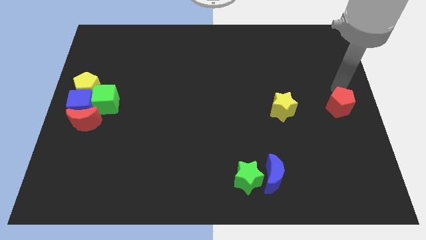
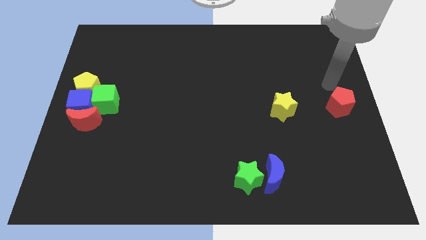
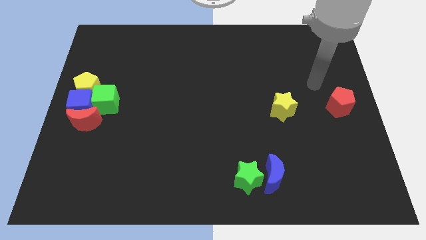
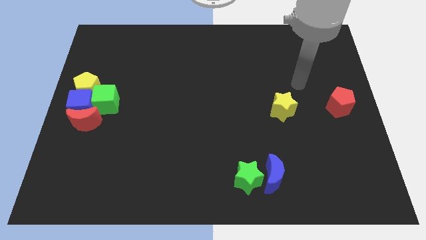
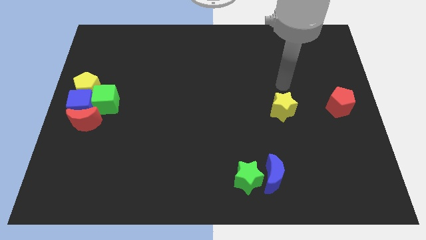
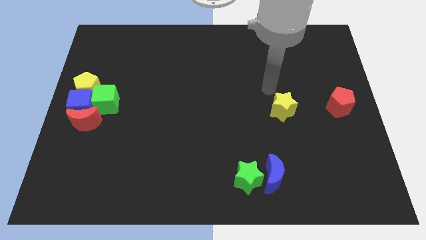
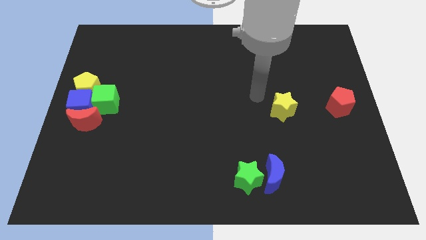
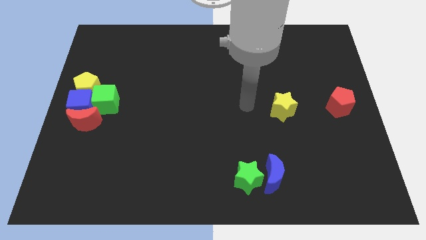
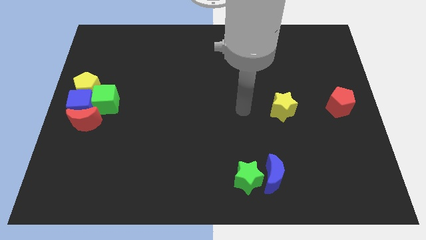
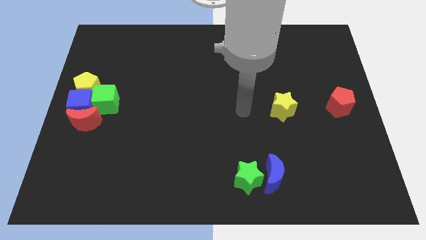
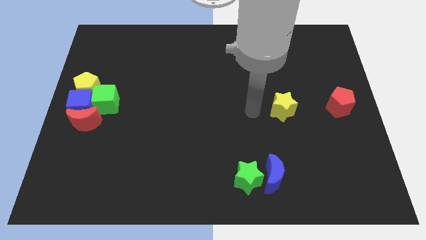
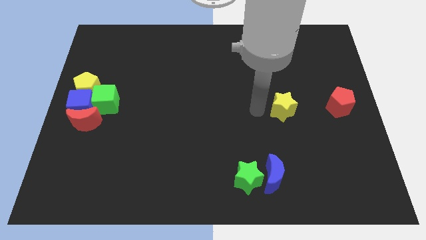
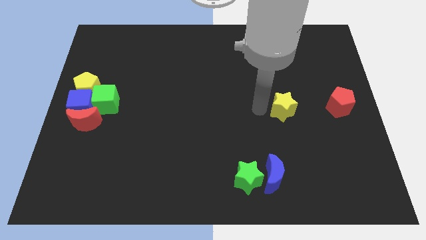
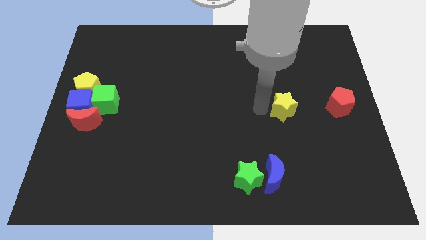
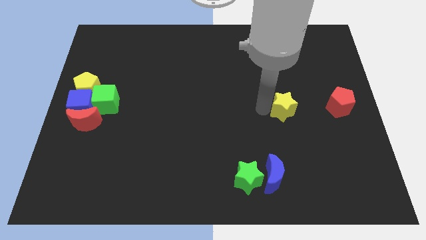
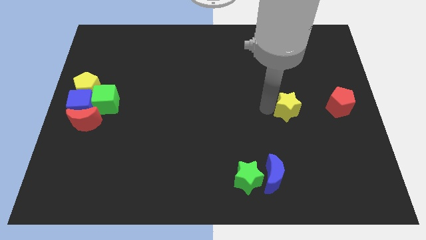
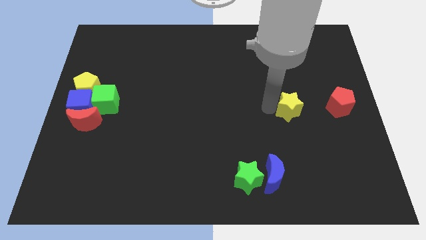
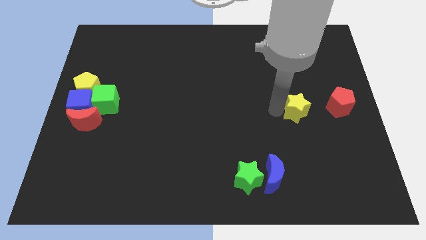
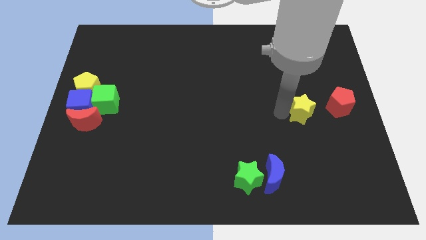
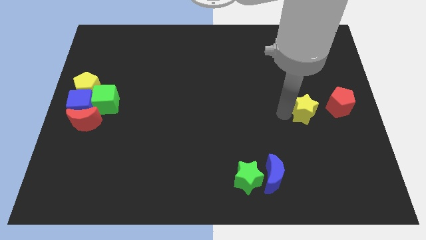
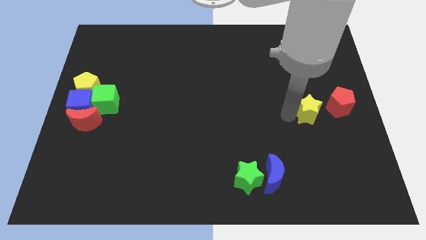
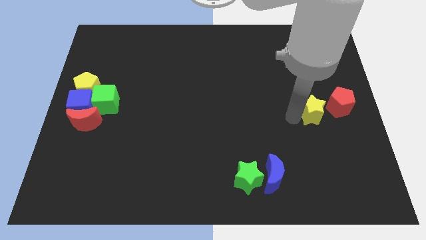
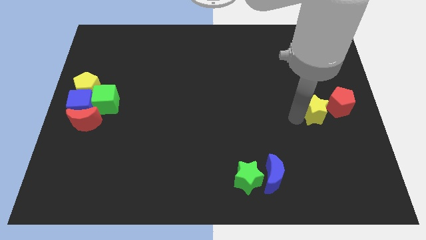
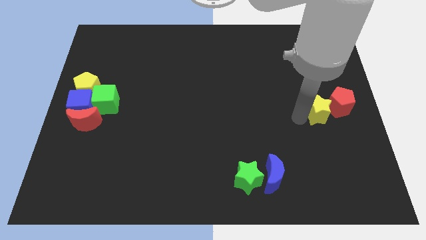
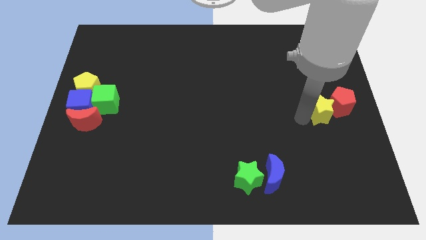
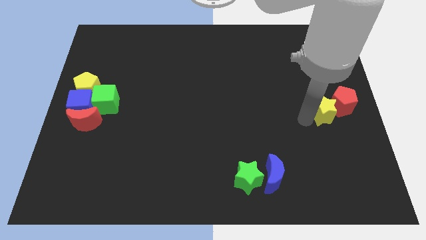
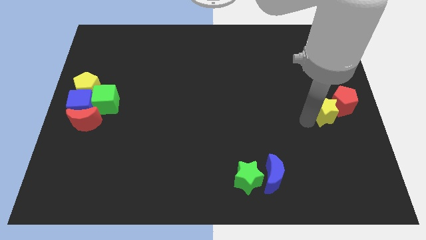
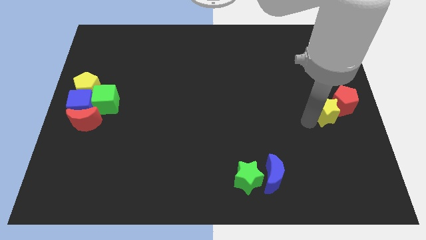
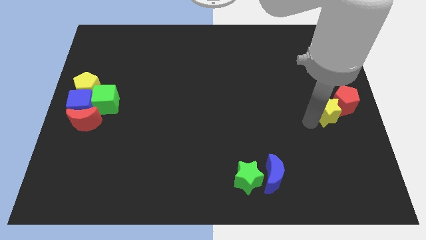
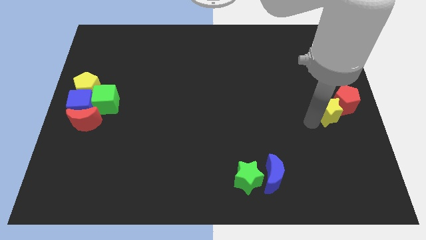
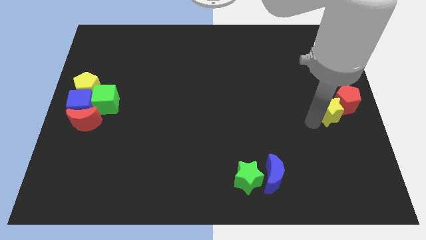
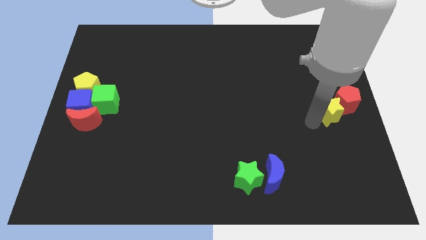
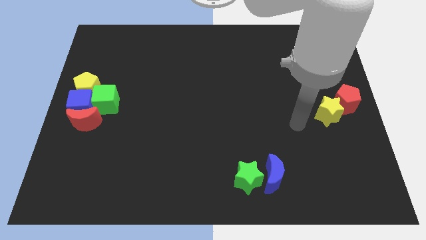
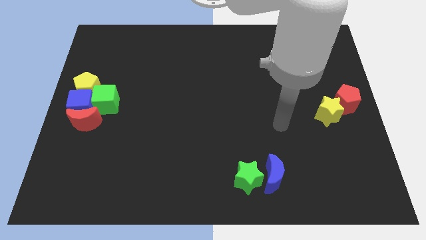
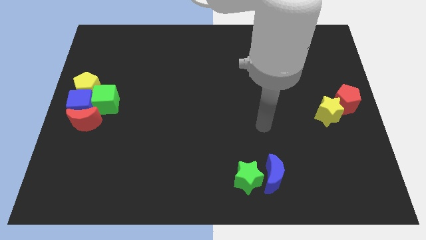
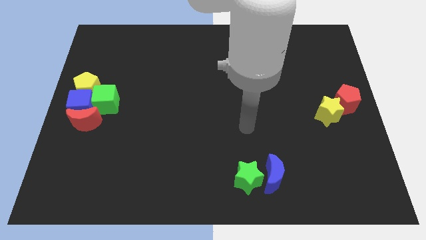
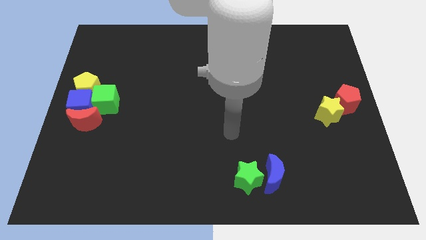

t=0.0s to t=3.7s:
place the red pentagon and yellow star at the center right of the board

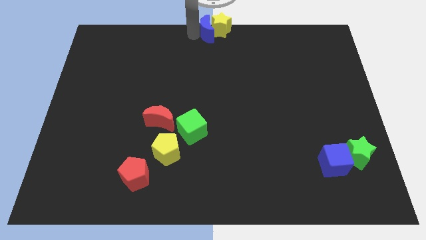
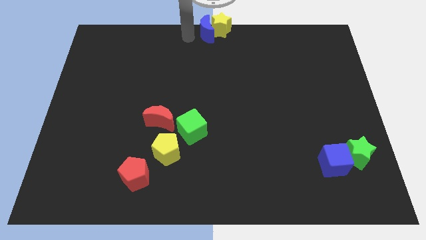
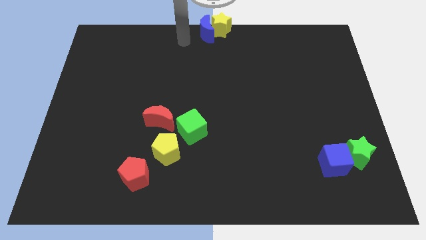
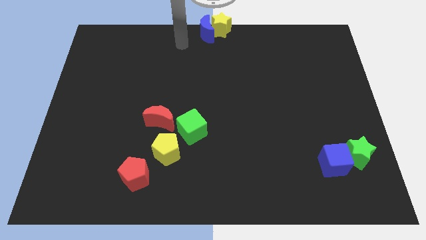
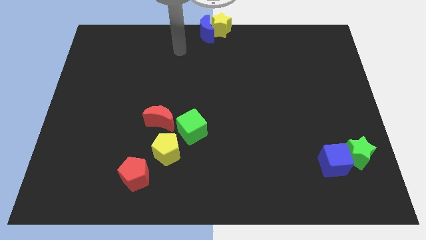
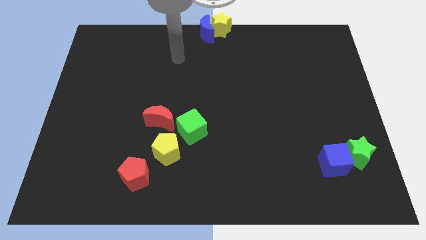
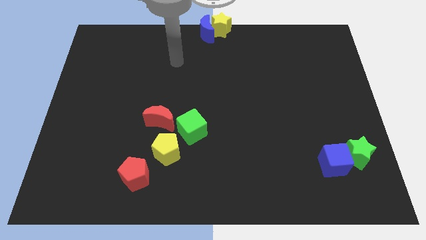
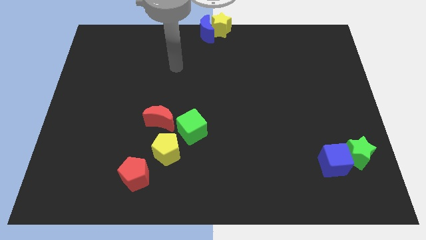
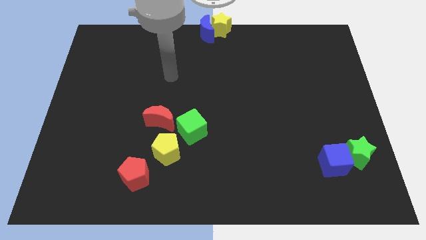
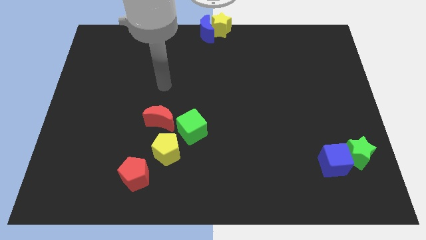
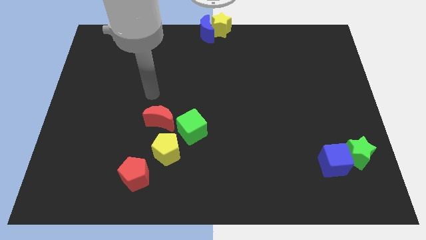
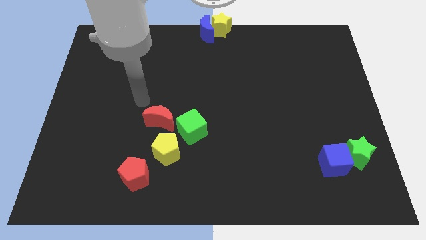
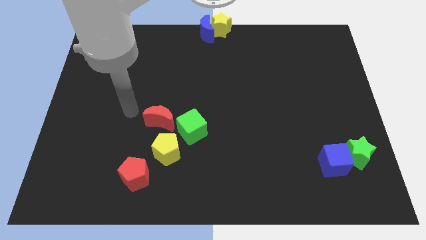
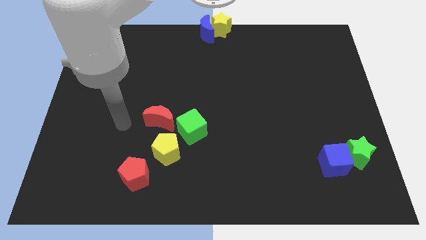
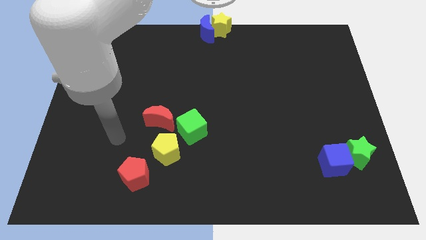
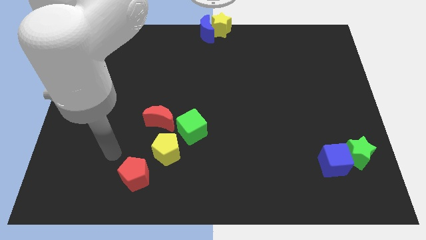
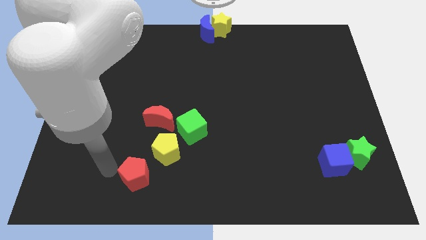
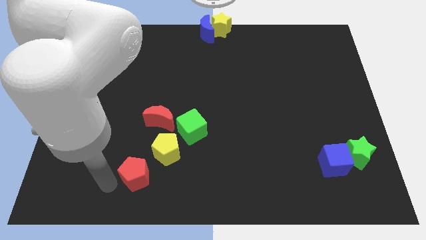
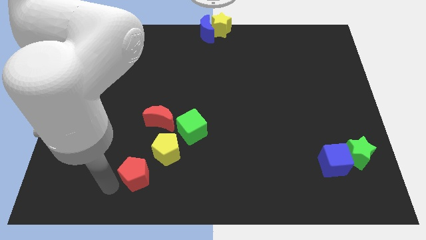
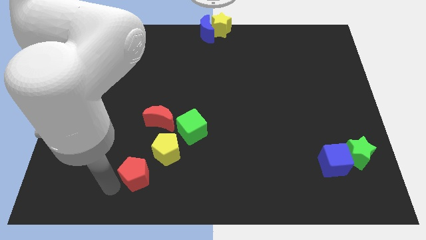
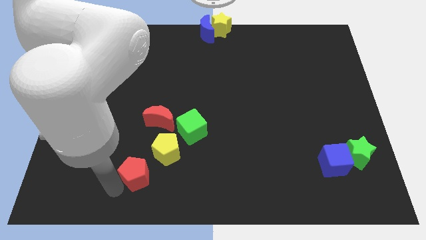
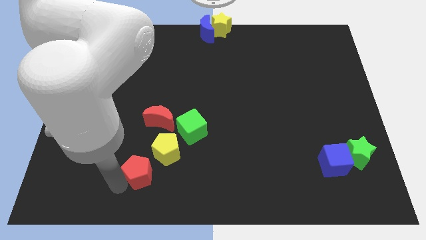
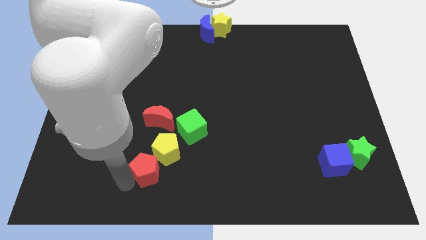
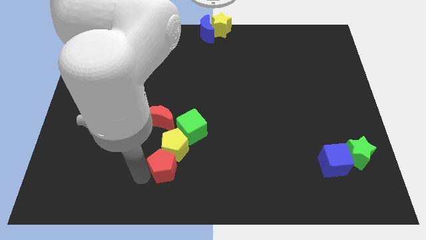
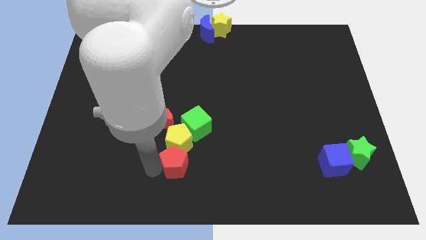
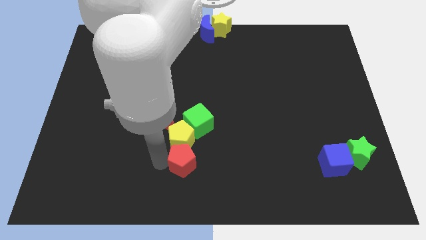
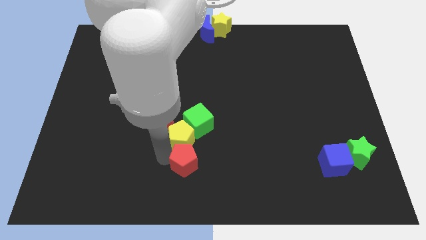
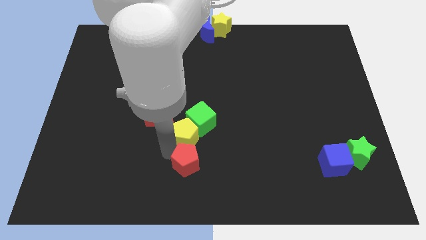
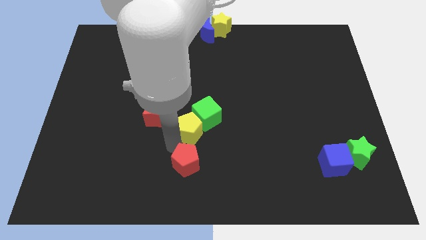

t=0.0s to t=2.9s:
push the red pentagon into the yellow pentagon and green cube

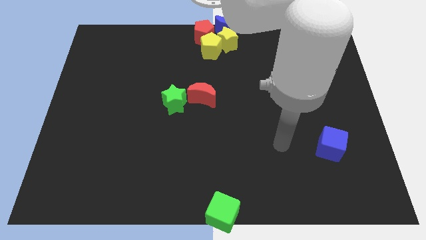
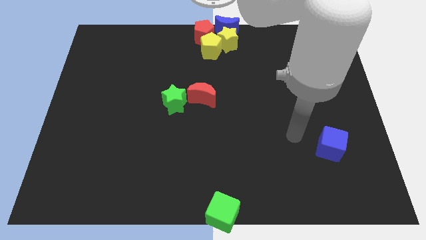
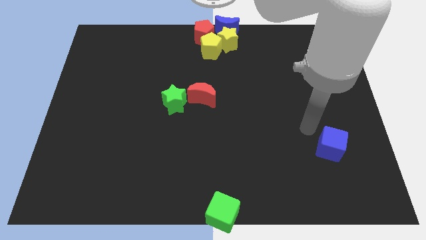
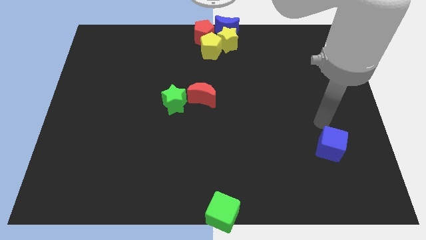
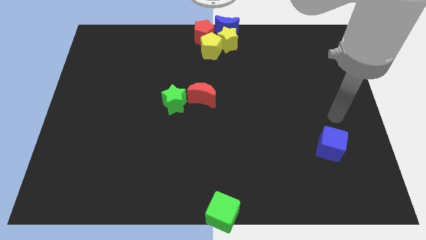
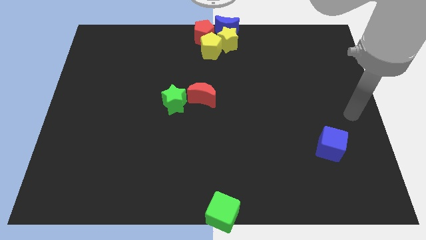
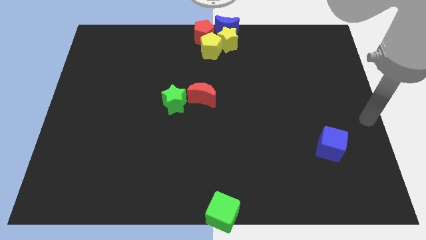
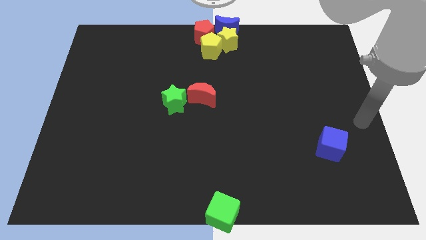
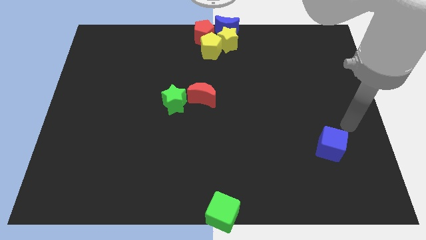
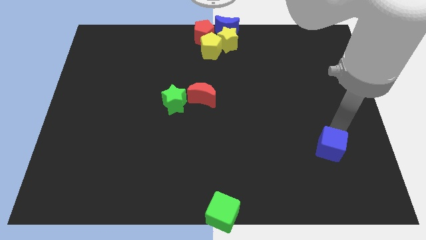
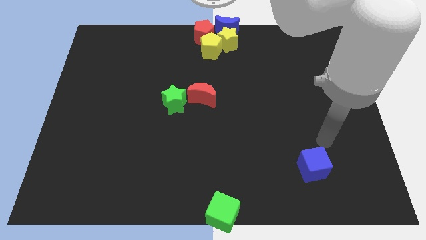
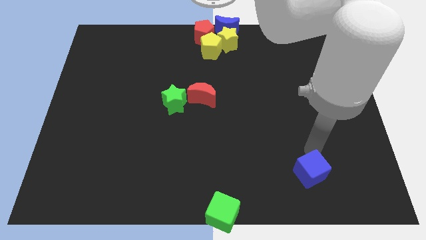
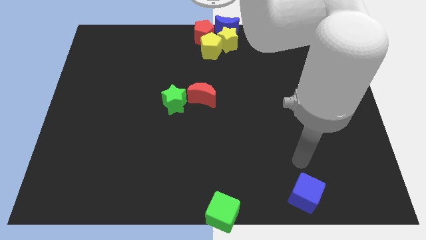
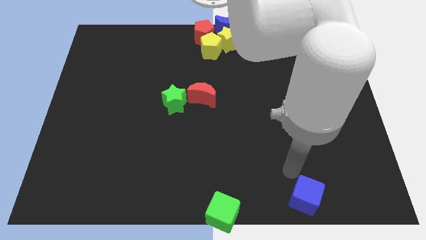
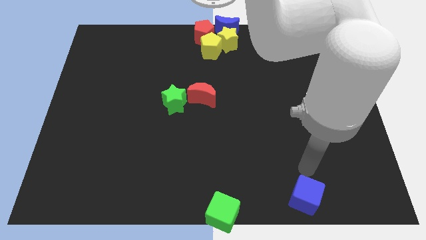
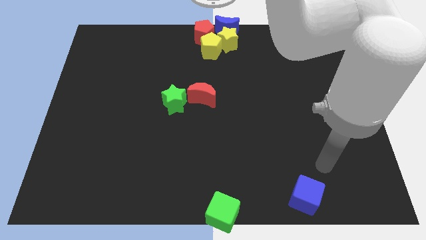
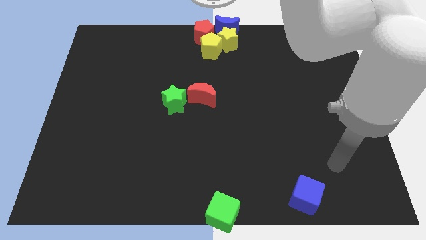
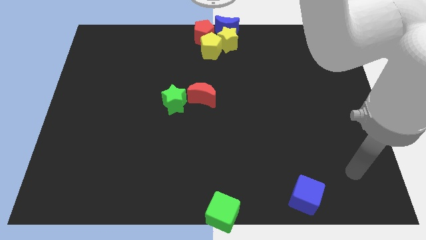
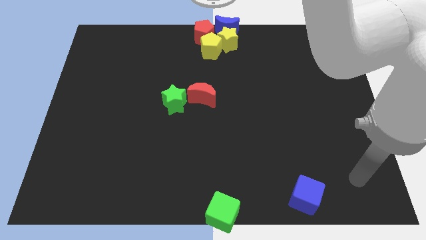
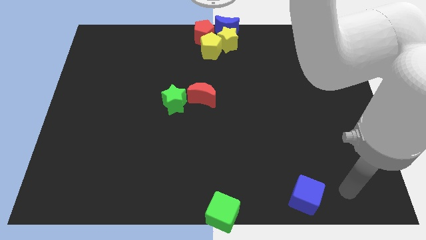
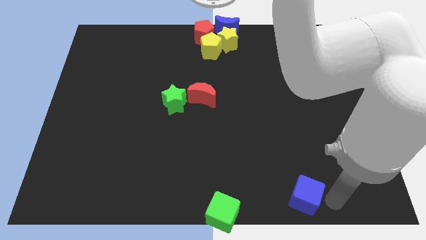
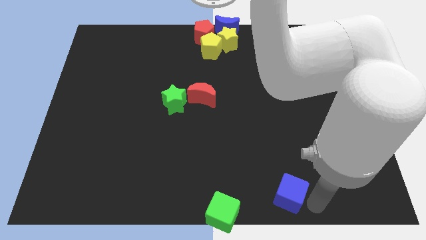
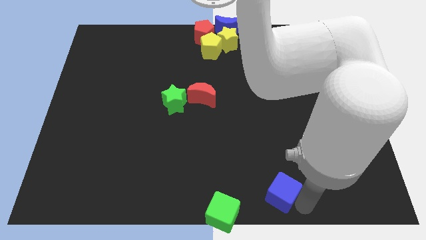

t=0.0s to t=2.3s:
push the blue cube towards green cube
